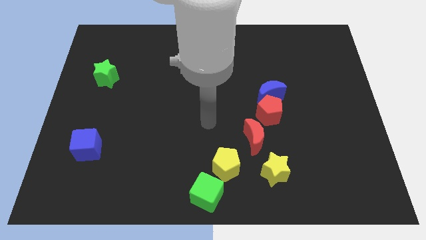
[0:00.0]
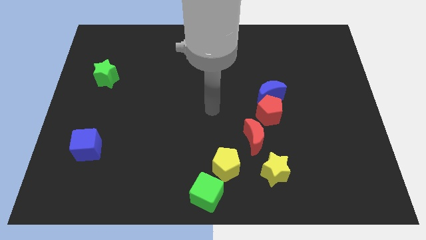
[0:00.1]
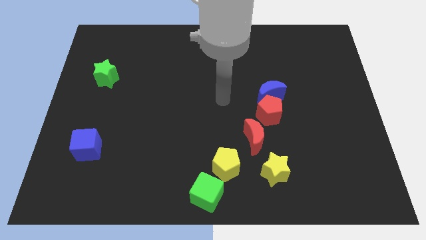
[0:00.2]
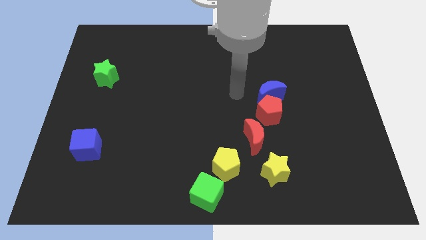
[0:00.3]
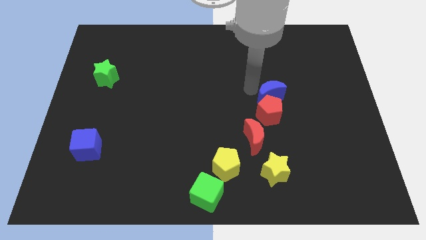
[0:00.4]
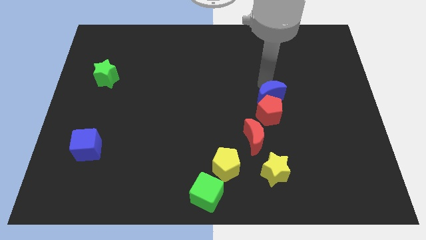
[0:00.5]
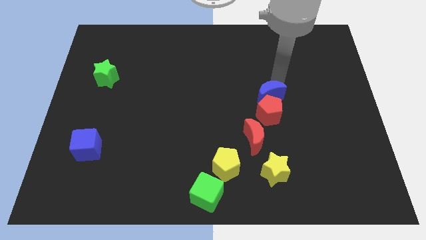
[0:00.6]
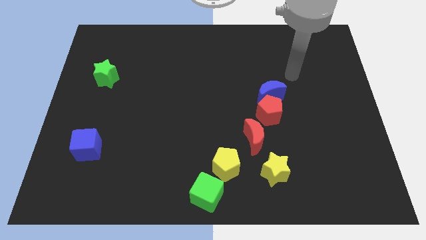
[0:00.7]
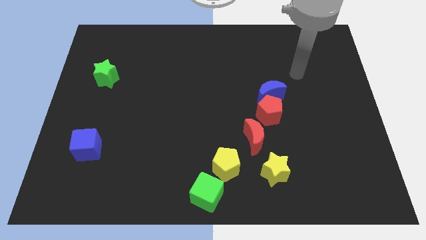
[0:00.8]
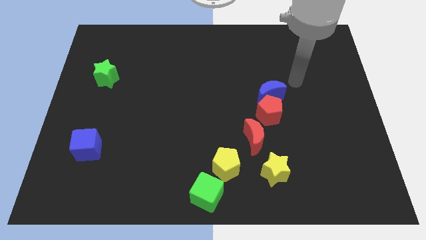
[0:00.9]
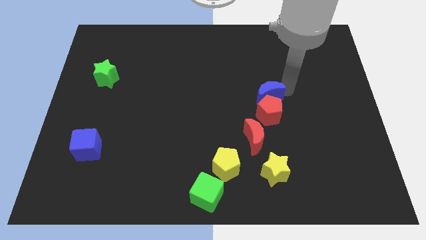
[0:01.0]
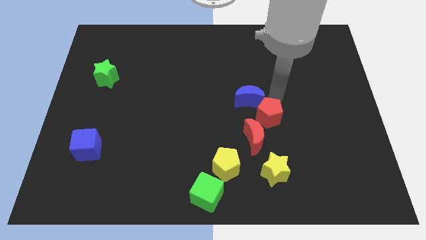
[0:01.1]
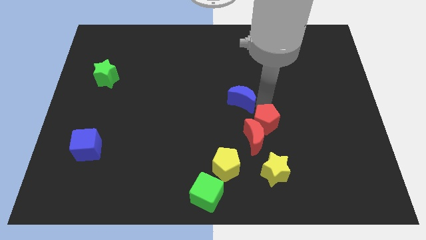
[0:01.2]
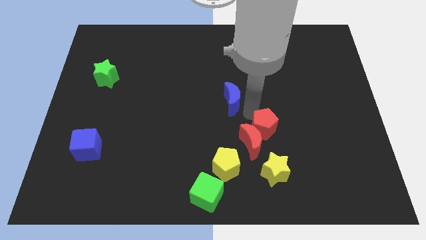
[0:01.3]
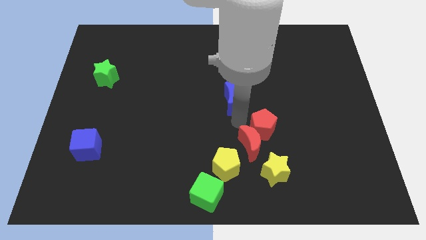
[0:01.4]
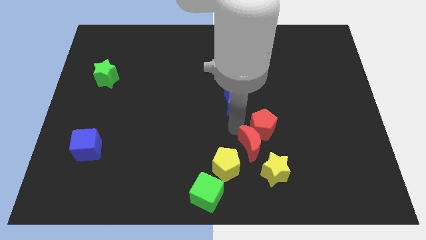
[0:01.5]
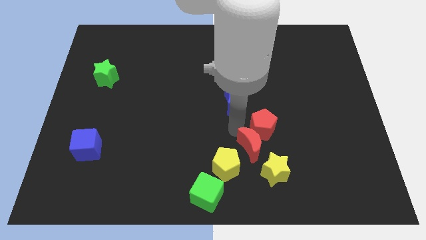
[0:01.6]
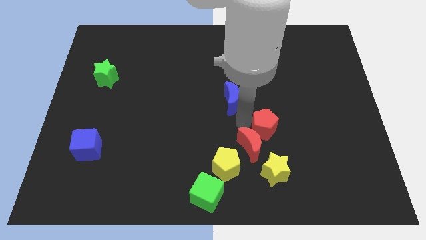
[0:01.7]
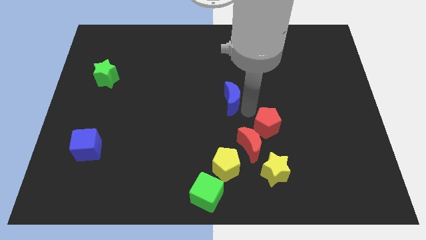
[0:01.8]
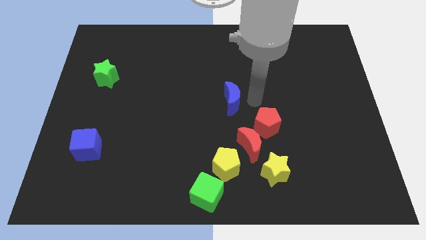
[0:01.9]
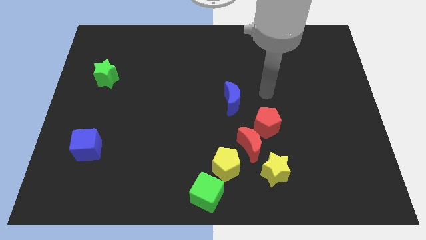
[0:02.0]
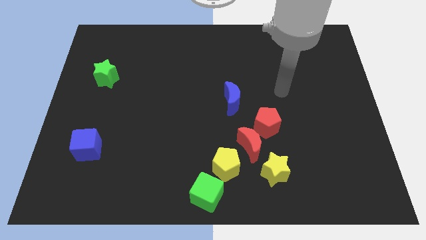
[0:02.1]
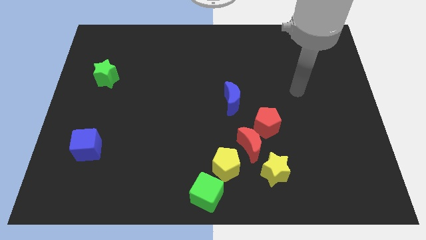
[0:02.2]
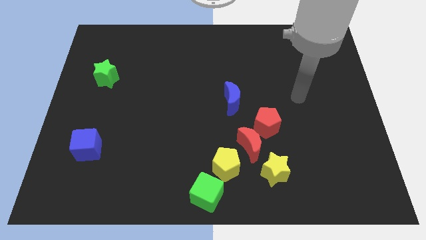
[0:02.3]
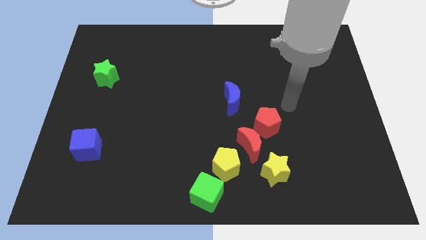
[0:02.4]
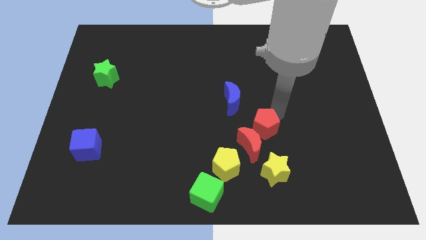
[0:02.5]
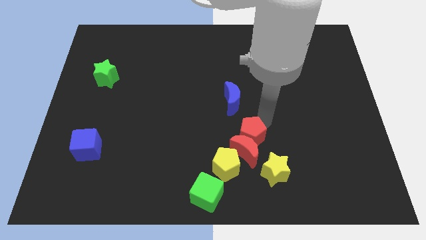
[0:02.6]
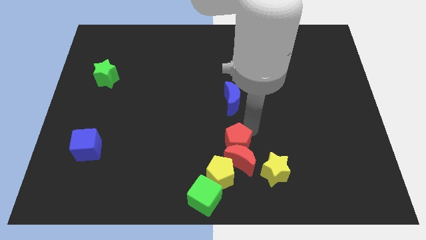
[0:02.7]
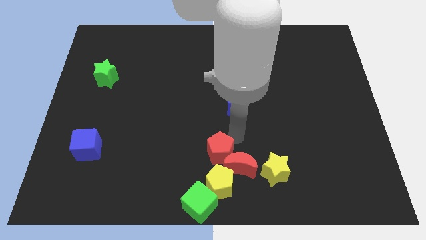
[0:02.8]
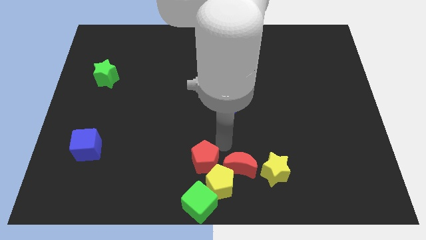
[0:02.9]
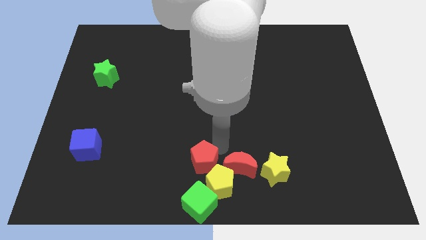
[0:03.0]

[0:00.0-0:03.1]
move red pentagon and red crescent downwards near the yellow pentagon

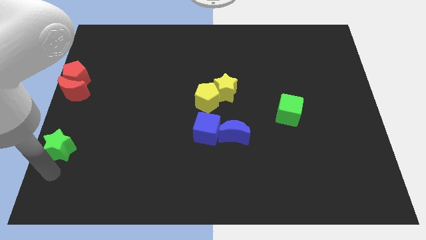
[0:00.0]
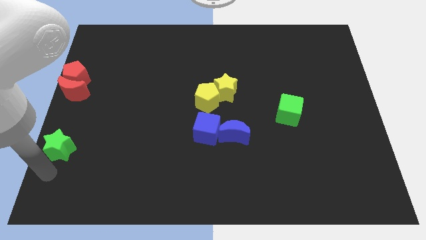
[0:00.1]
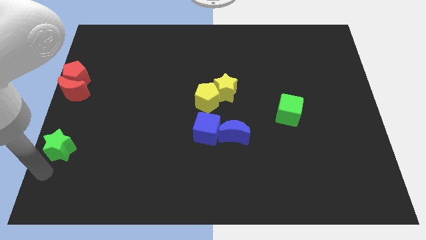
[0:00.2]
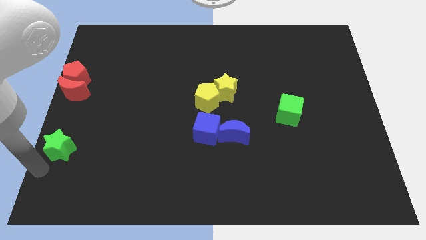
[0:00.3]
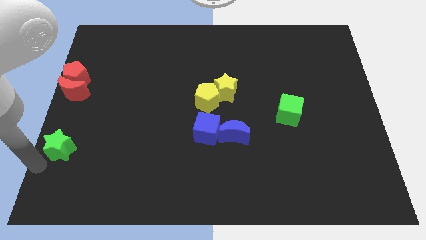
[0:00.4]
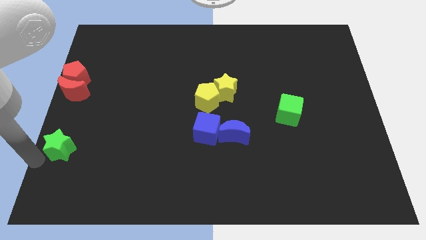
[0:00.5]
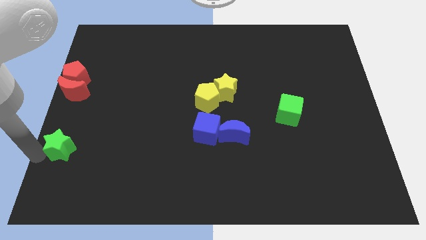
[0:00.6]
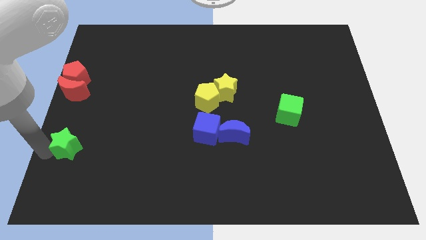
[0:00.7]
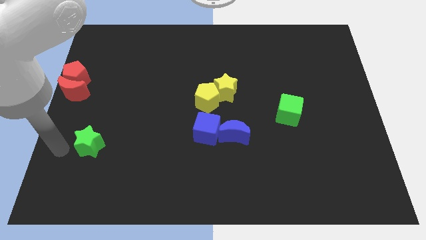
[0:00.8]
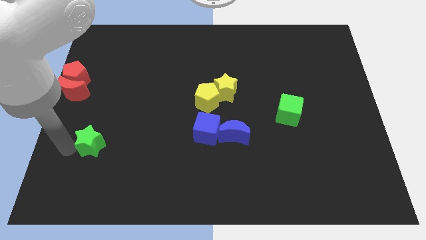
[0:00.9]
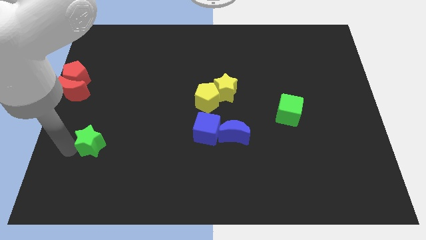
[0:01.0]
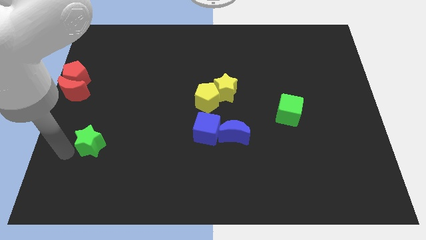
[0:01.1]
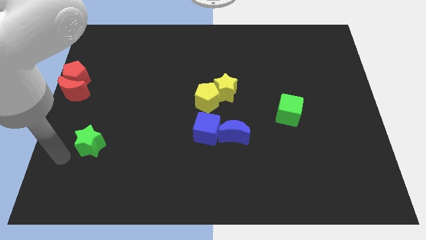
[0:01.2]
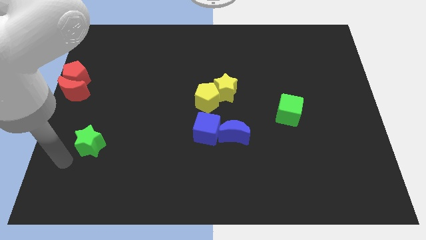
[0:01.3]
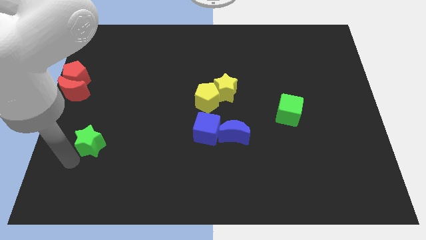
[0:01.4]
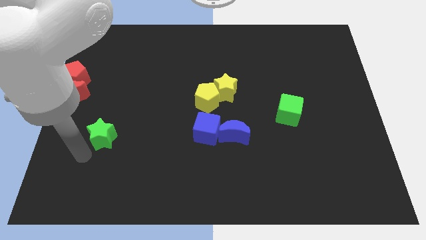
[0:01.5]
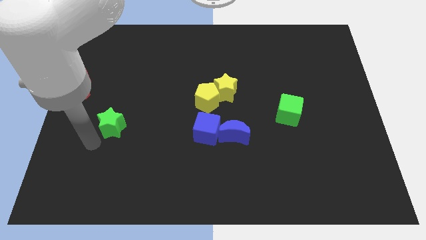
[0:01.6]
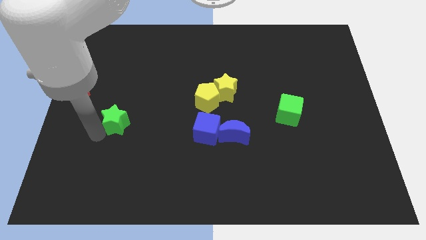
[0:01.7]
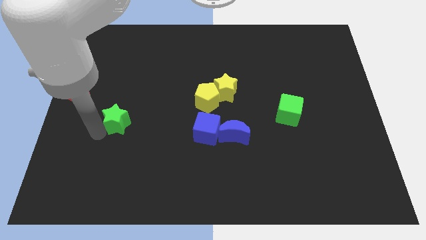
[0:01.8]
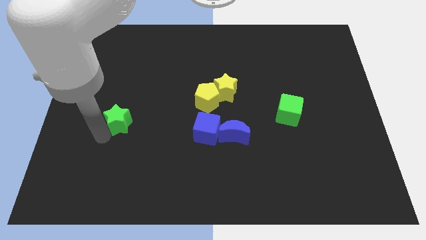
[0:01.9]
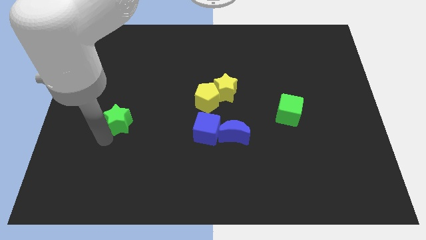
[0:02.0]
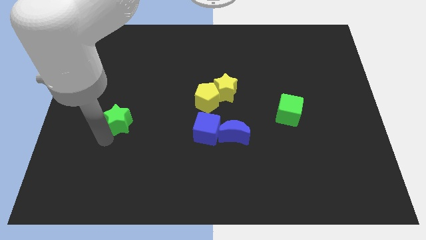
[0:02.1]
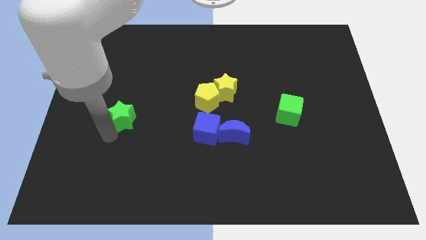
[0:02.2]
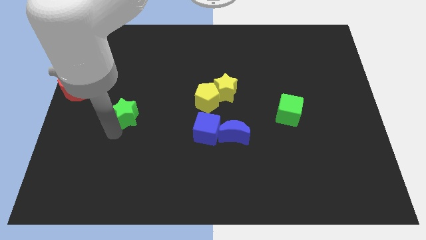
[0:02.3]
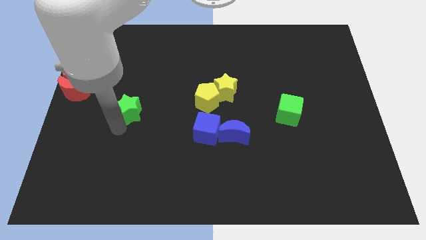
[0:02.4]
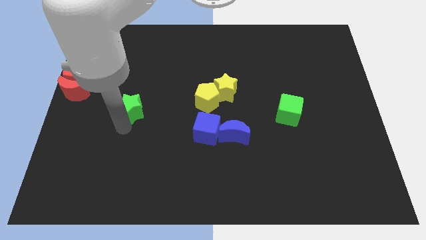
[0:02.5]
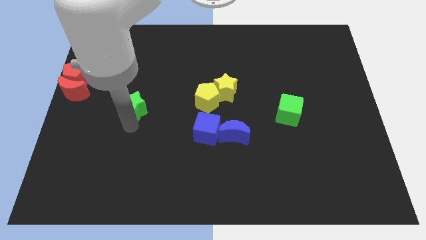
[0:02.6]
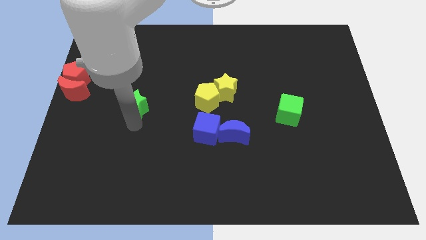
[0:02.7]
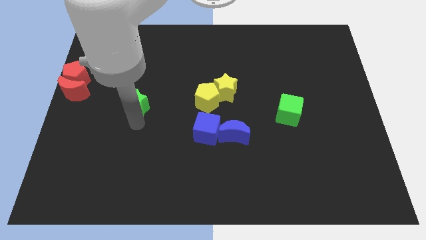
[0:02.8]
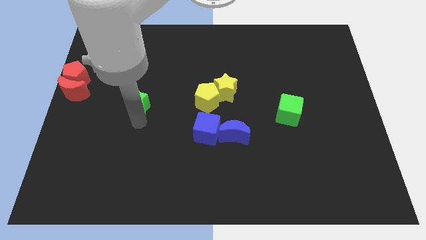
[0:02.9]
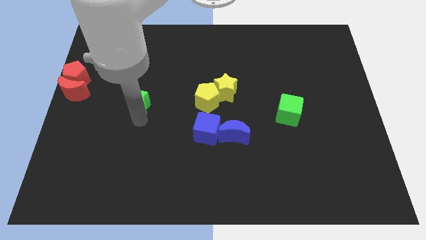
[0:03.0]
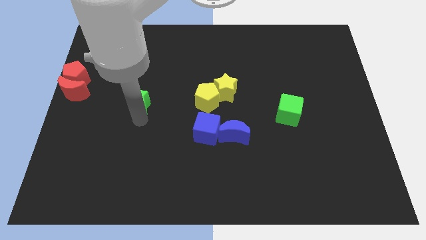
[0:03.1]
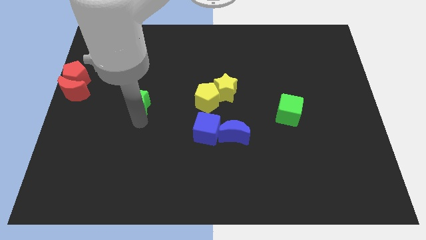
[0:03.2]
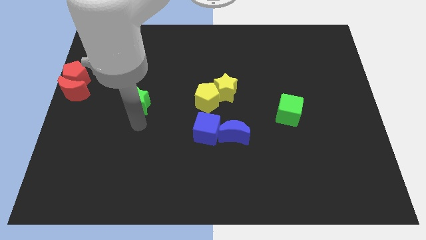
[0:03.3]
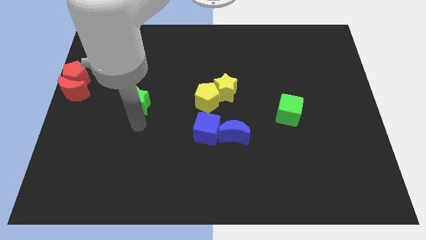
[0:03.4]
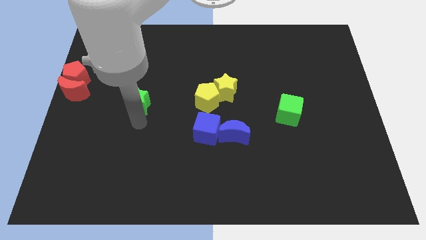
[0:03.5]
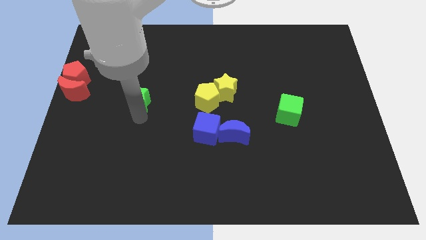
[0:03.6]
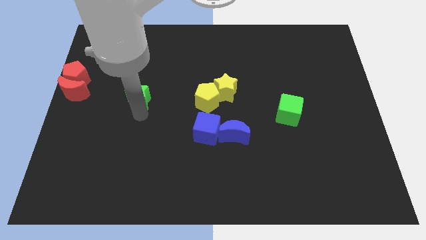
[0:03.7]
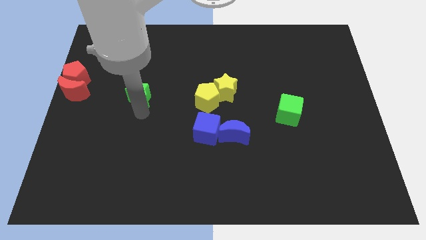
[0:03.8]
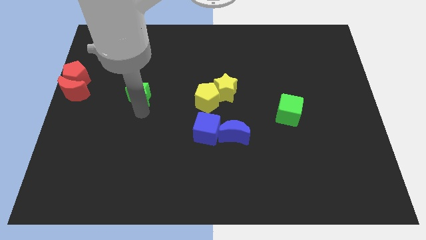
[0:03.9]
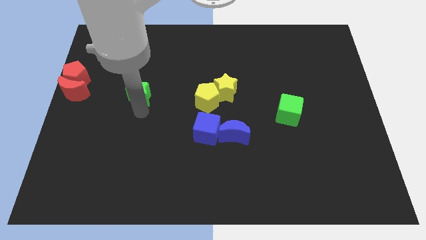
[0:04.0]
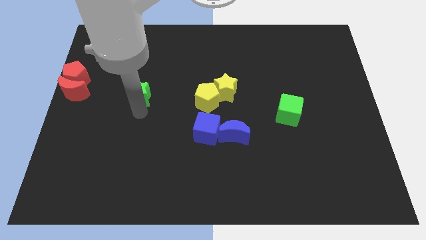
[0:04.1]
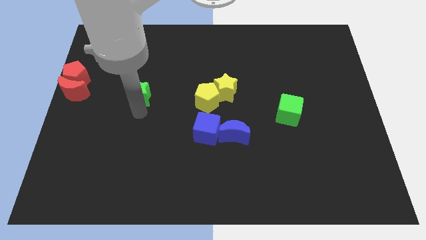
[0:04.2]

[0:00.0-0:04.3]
move the green star parallel to the left of the yellow pentagon
